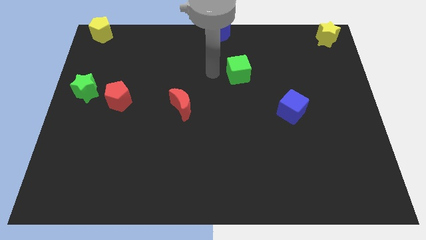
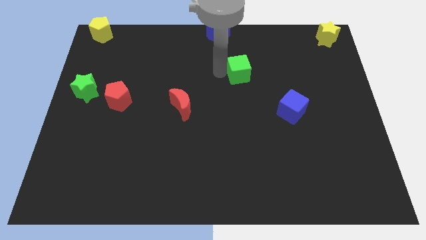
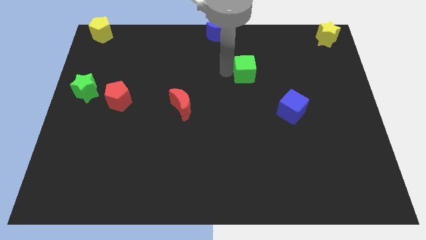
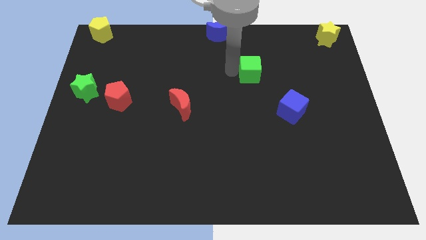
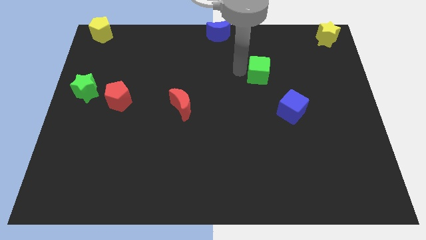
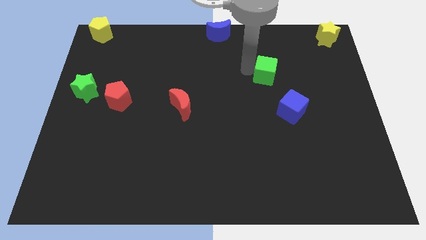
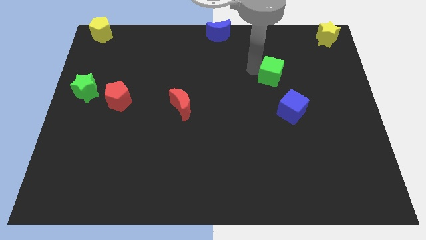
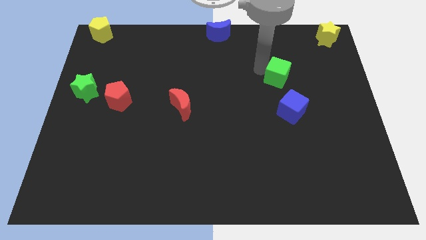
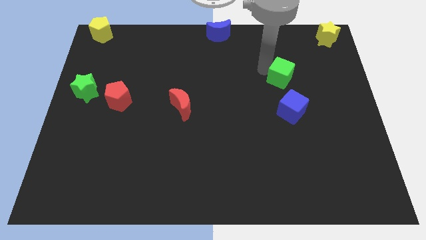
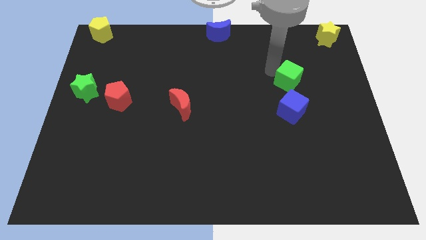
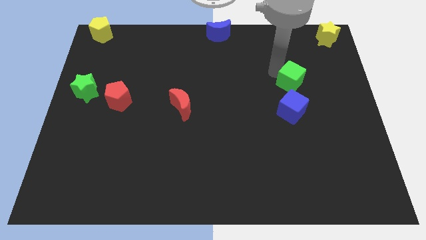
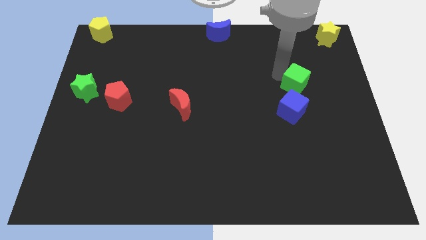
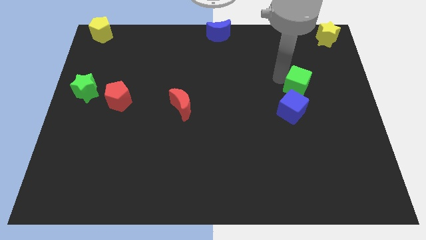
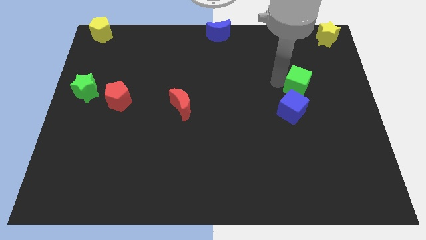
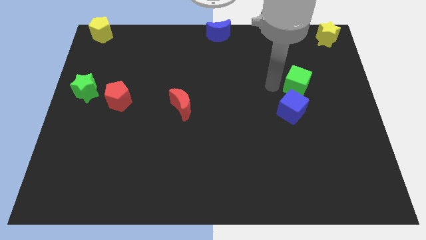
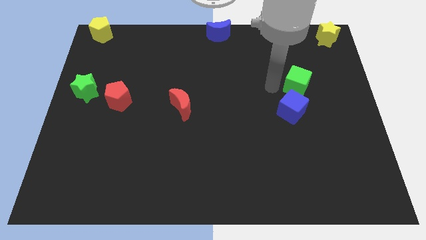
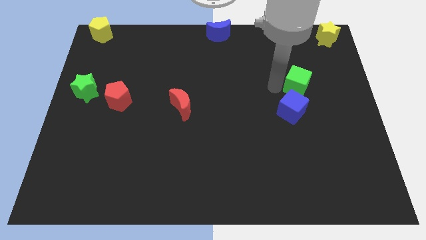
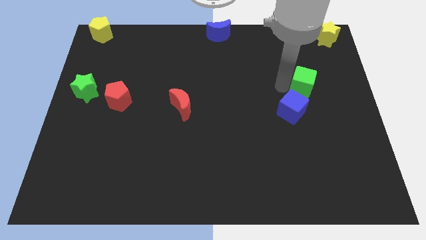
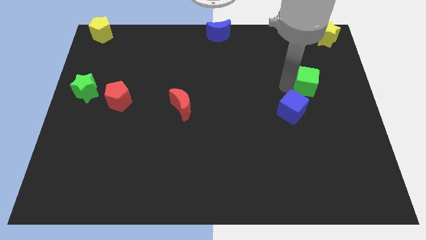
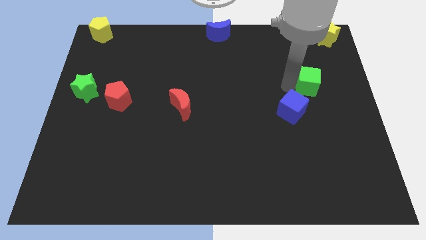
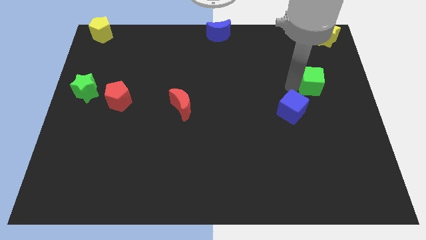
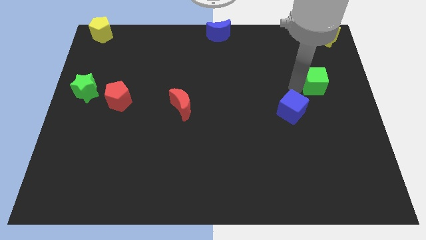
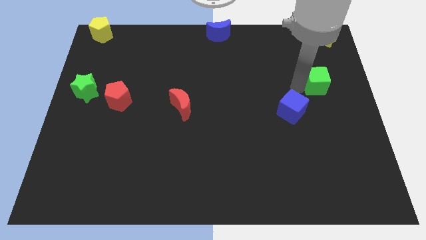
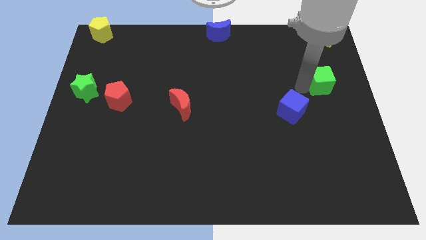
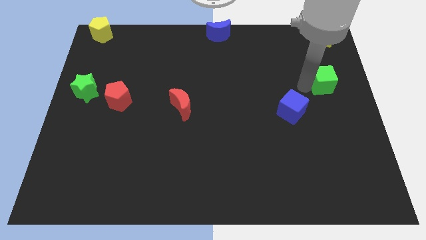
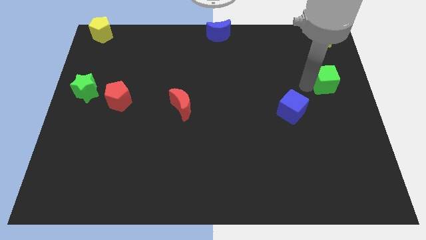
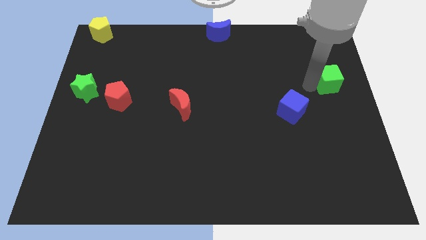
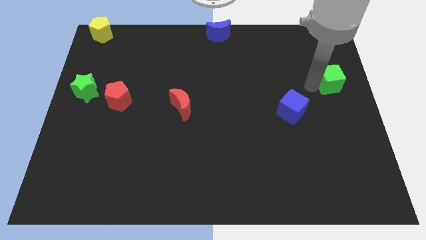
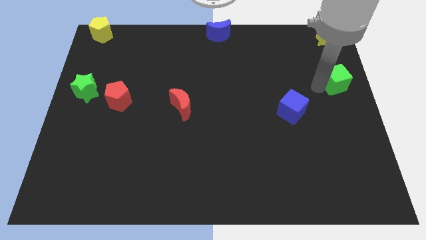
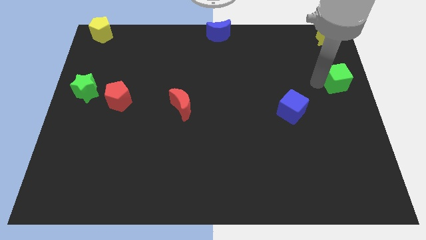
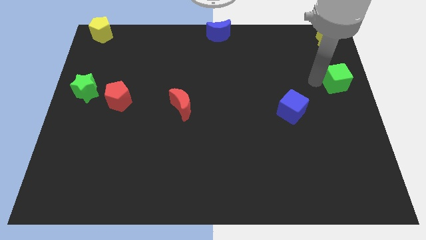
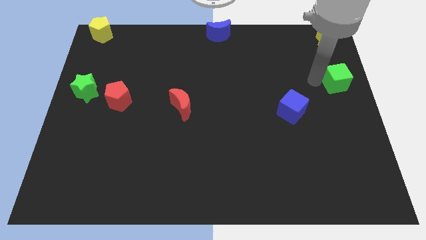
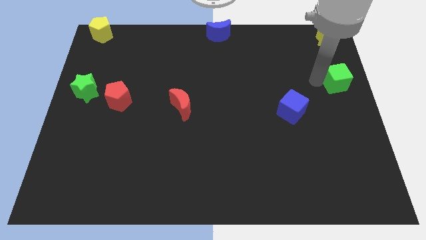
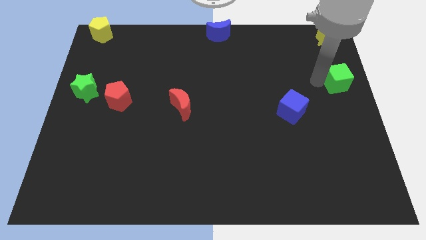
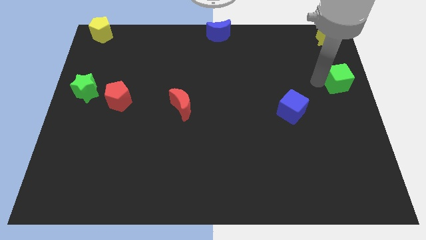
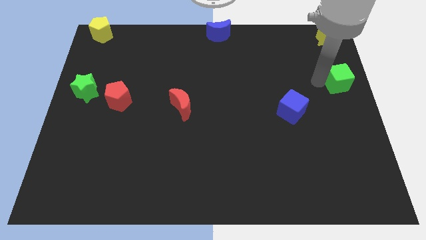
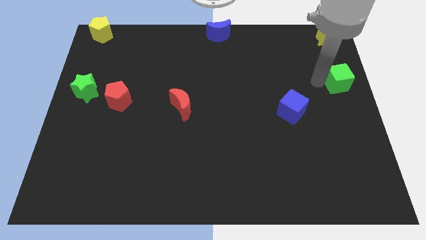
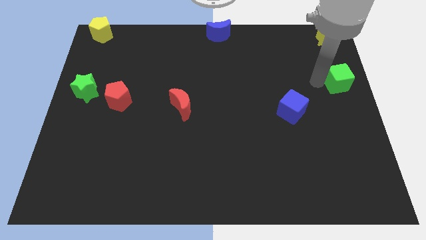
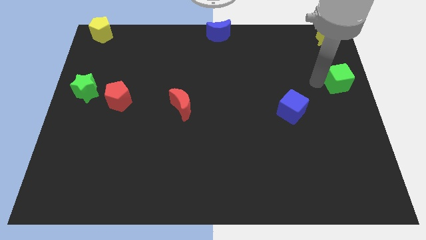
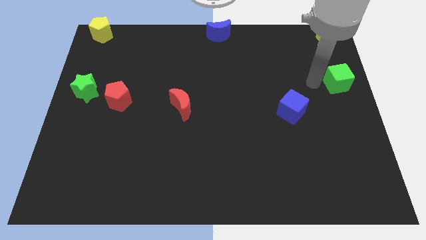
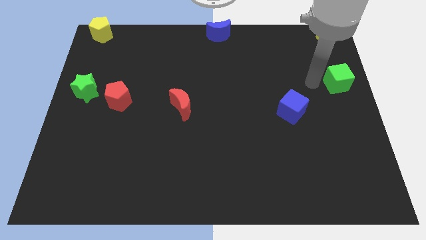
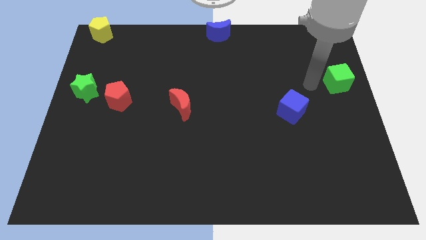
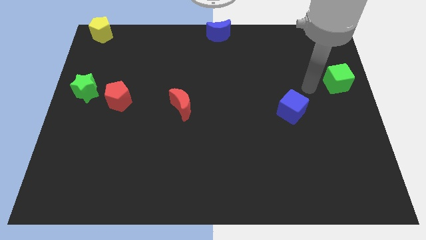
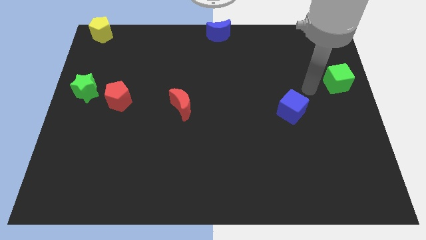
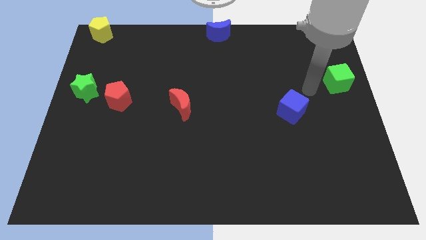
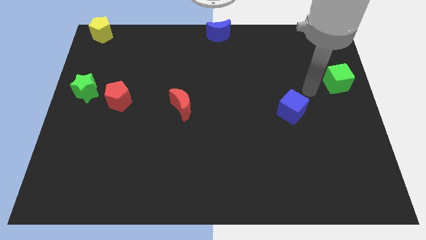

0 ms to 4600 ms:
push the green cube to the bottom of the yellow star

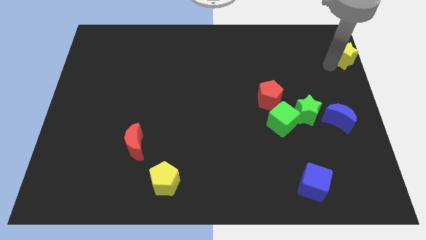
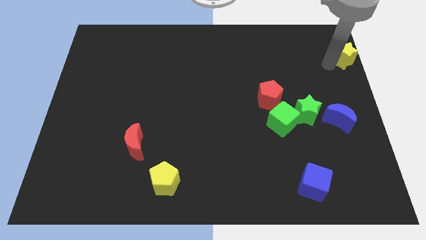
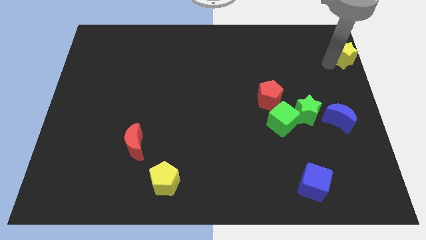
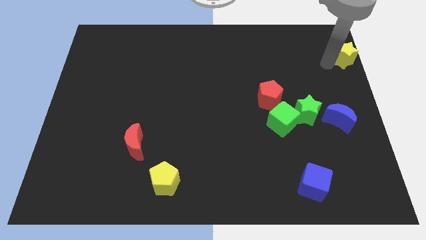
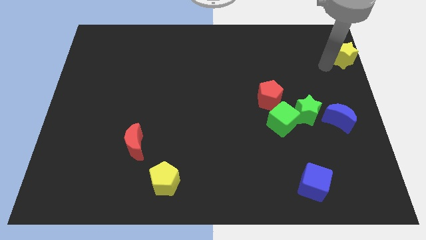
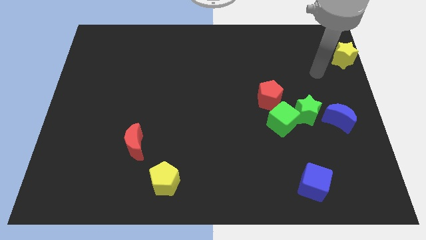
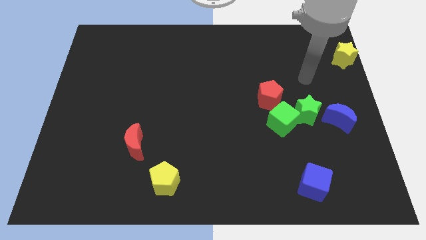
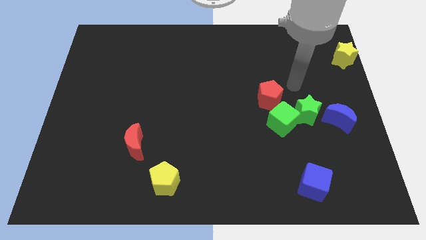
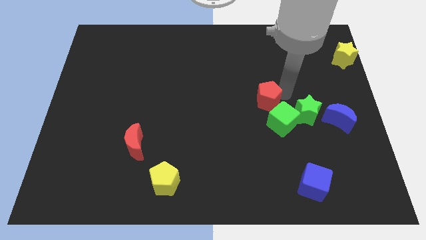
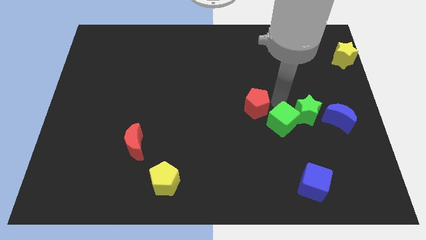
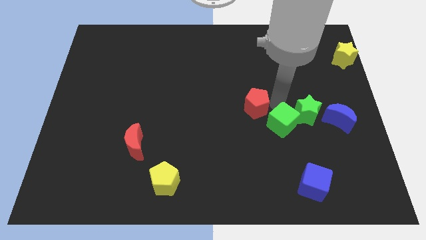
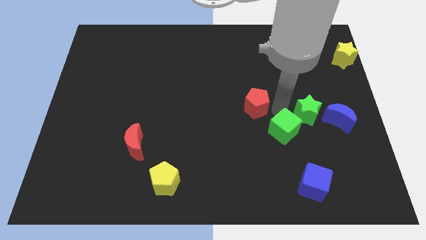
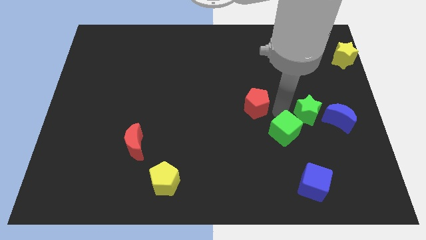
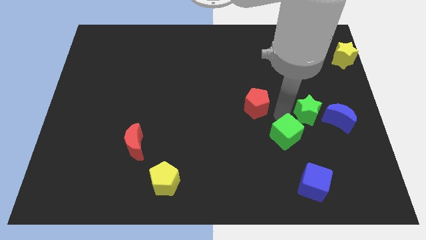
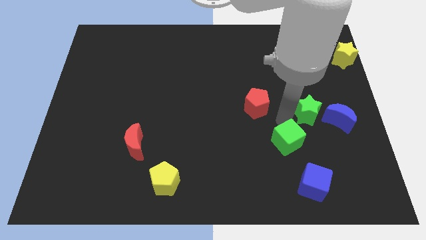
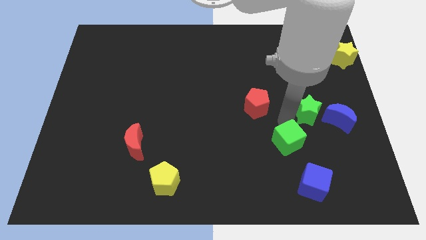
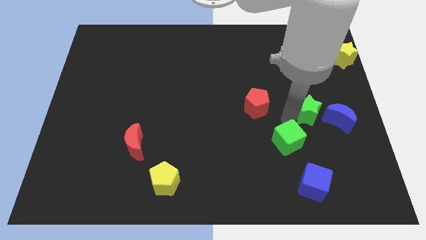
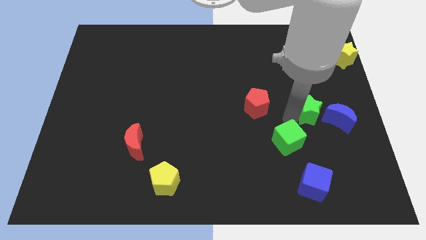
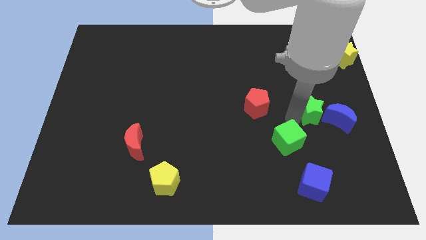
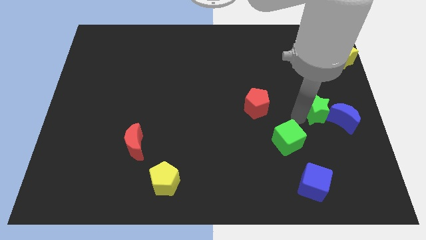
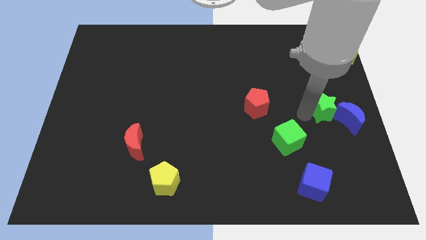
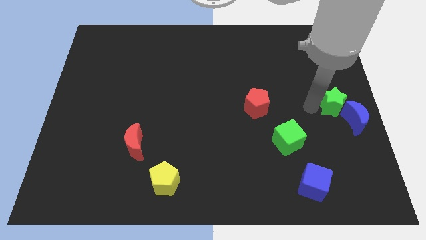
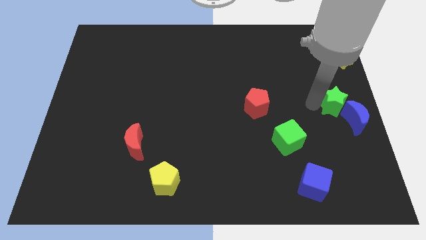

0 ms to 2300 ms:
move green cube towards the blue cube

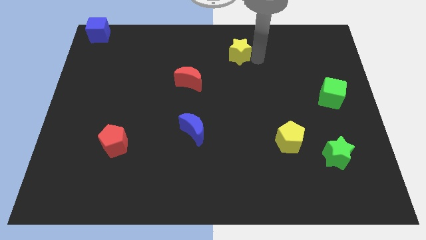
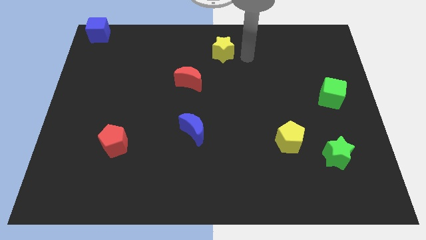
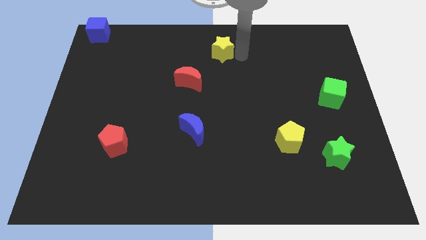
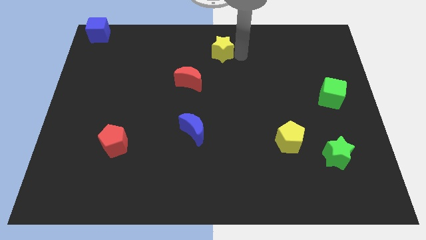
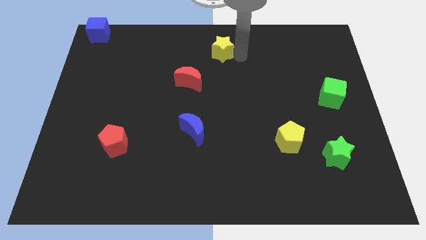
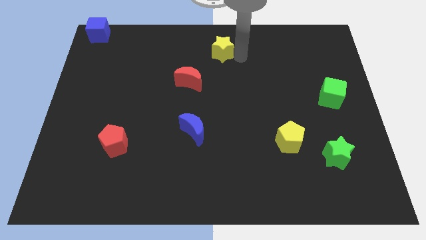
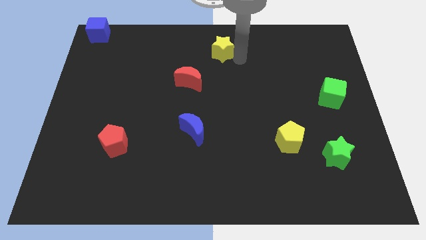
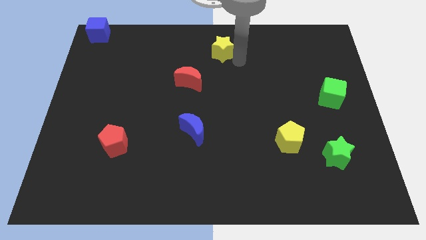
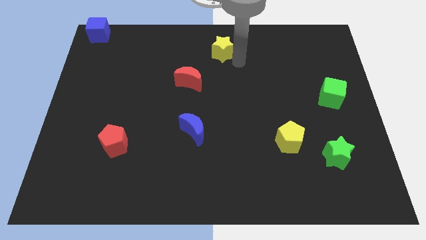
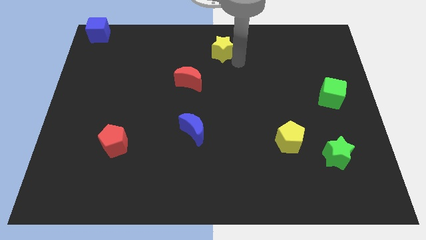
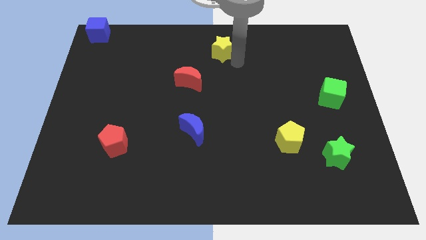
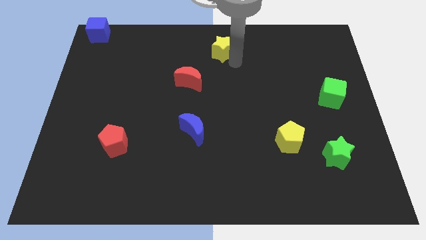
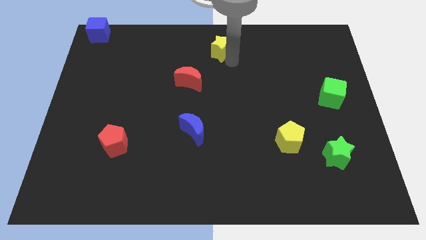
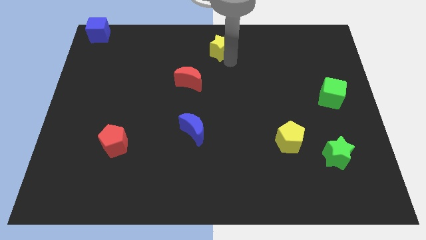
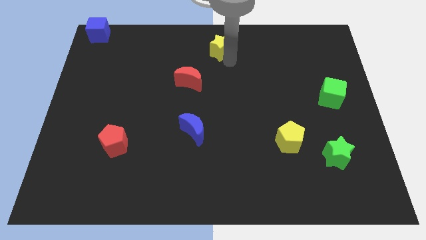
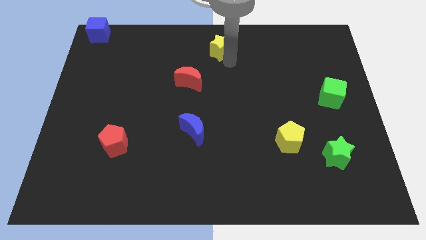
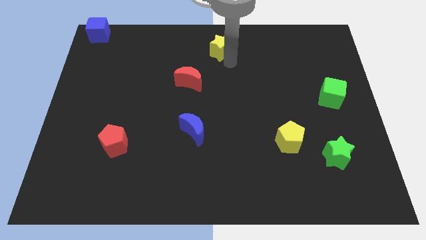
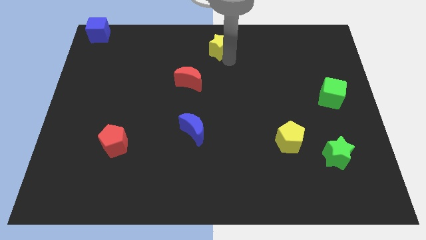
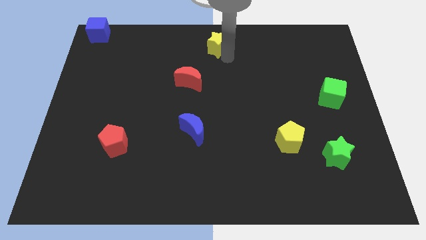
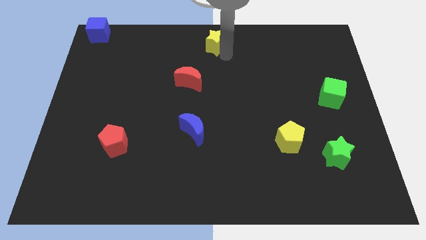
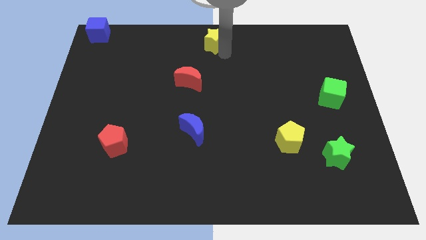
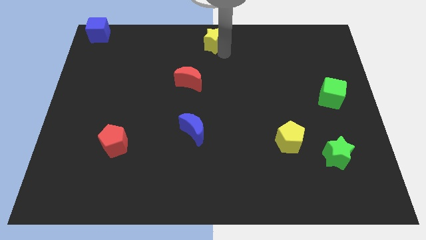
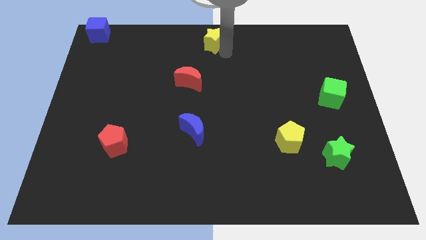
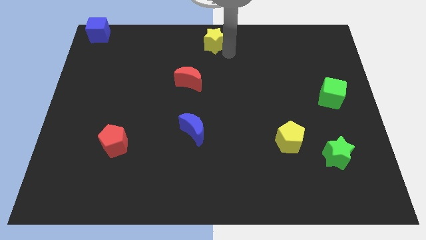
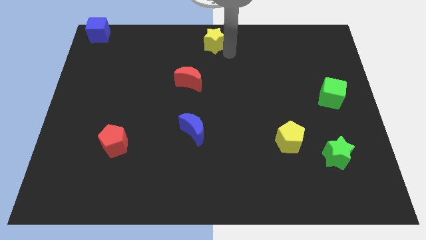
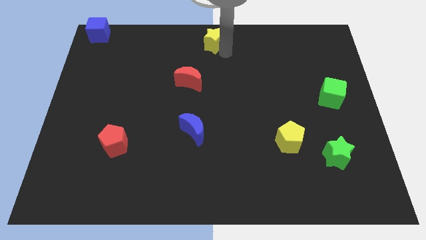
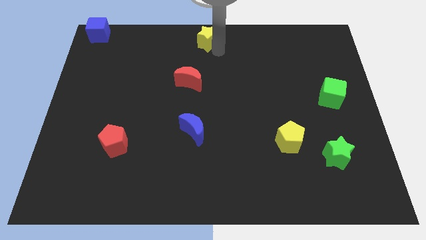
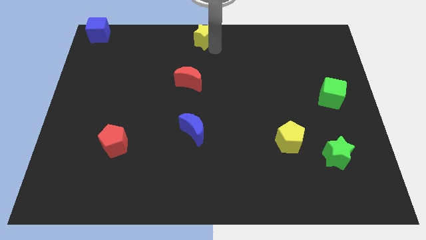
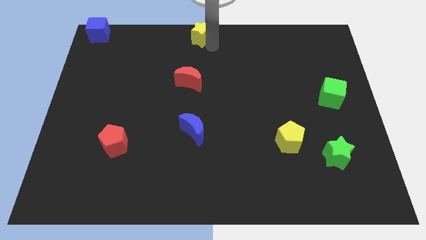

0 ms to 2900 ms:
place the yellow star above the red moon
